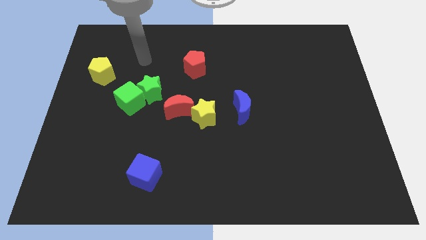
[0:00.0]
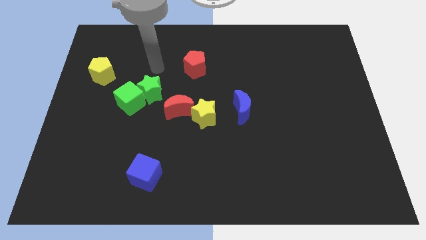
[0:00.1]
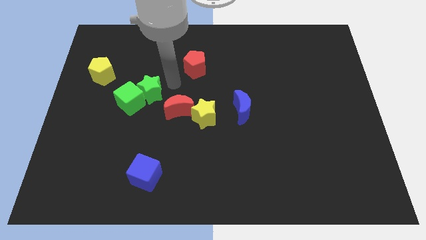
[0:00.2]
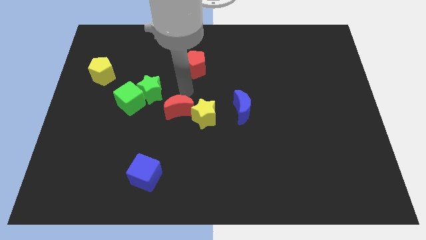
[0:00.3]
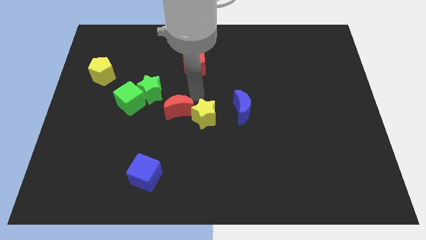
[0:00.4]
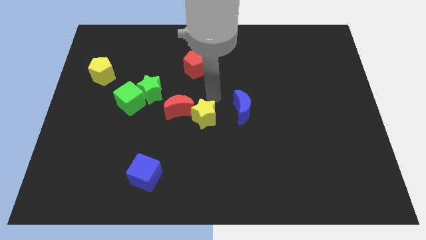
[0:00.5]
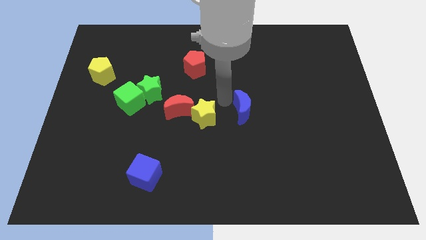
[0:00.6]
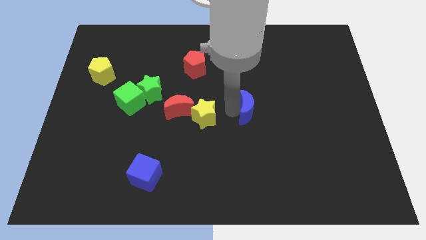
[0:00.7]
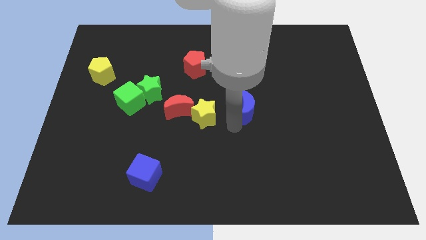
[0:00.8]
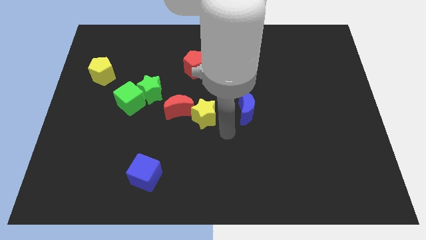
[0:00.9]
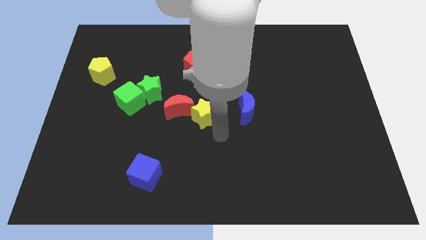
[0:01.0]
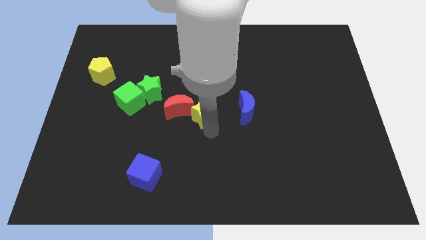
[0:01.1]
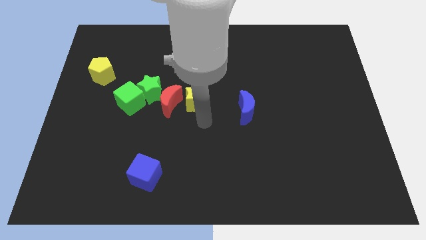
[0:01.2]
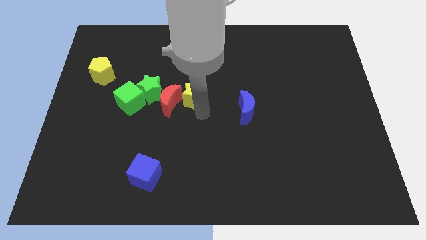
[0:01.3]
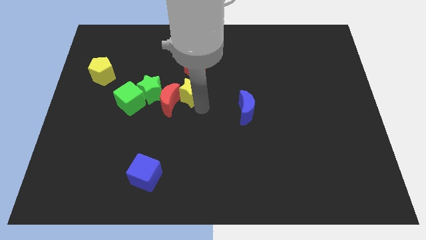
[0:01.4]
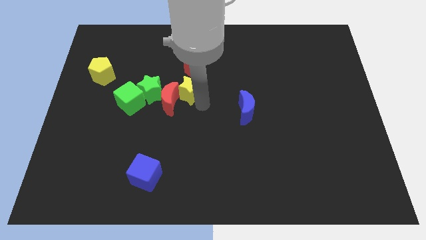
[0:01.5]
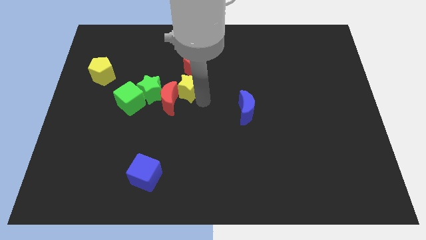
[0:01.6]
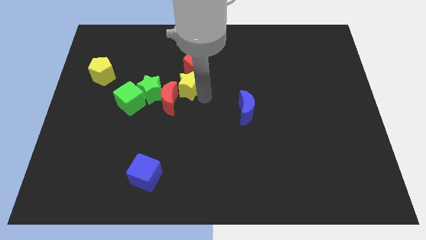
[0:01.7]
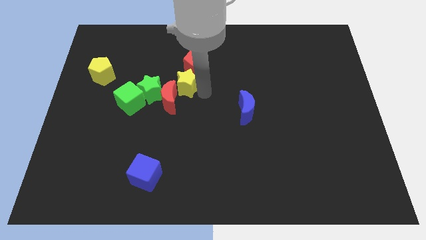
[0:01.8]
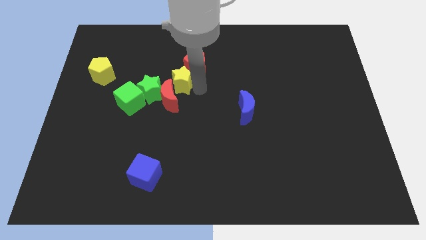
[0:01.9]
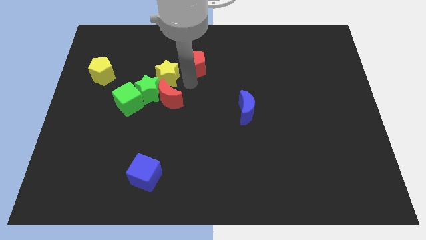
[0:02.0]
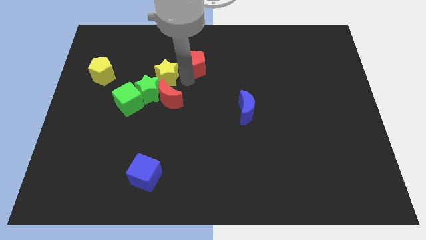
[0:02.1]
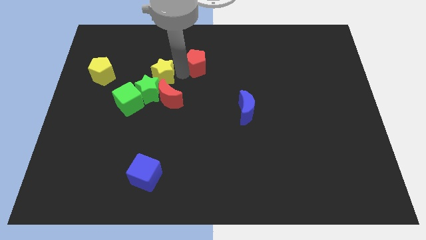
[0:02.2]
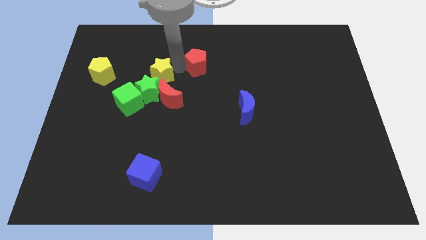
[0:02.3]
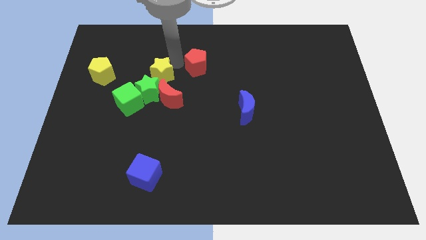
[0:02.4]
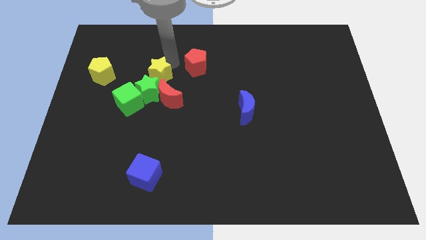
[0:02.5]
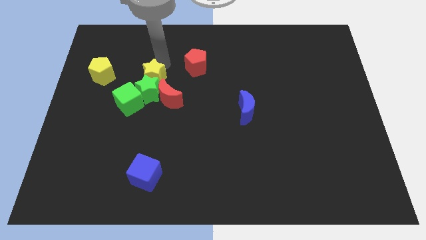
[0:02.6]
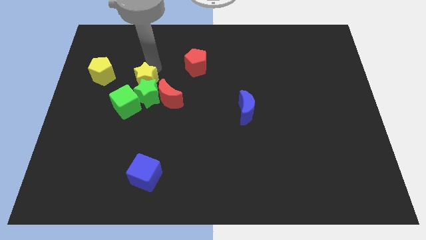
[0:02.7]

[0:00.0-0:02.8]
put the yellow star next to the green star

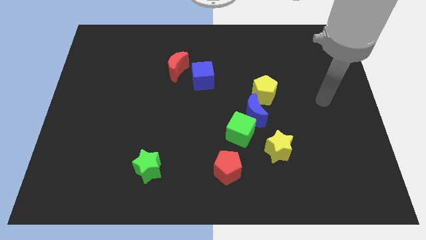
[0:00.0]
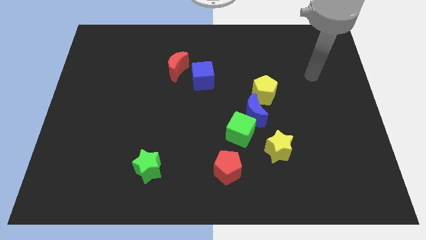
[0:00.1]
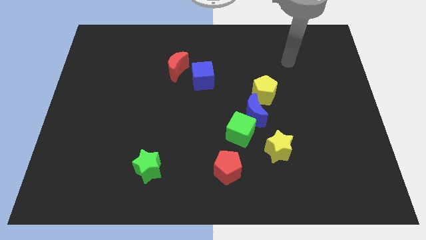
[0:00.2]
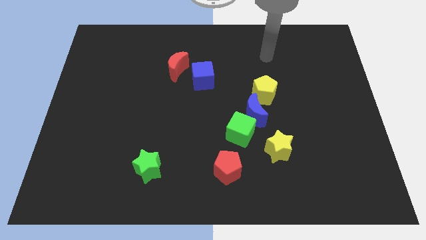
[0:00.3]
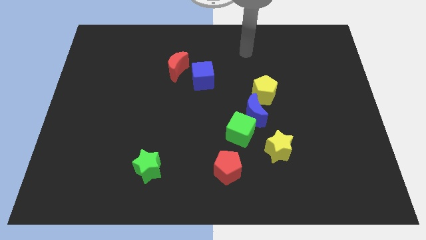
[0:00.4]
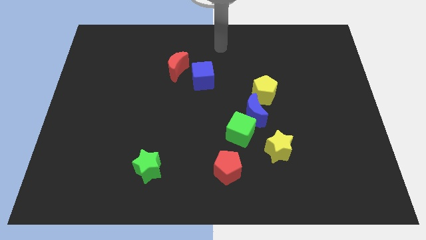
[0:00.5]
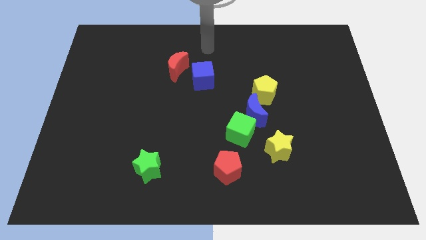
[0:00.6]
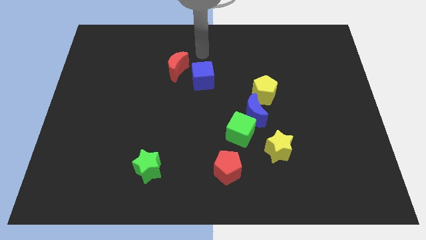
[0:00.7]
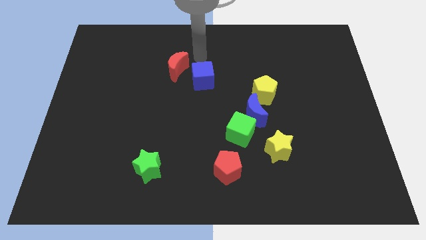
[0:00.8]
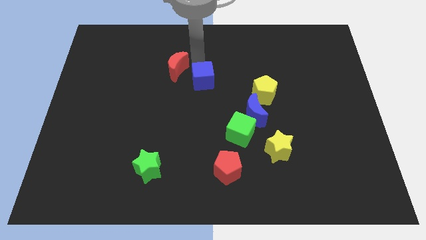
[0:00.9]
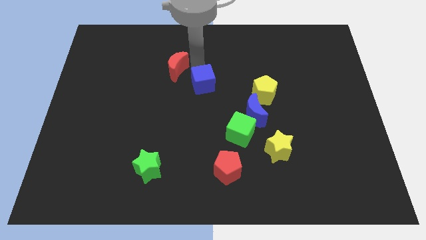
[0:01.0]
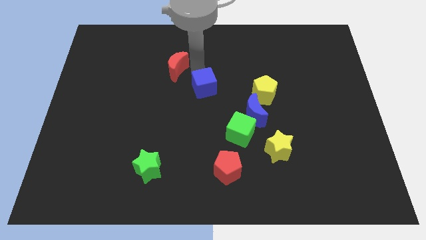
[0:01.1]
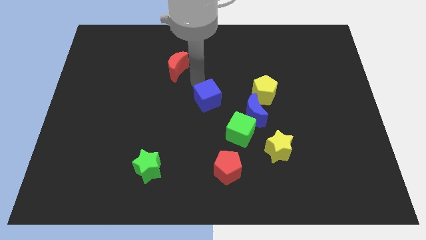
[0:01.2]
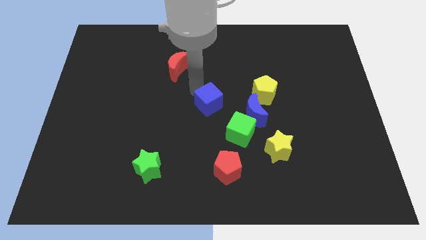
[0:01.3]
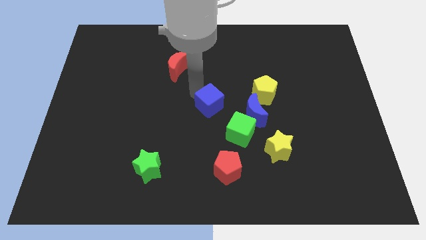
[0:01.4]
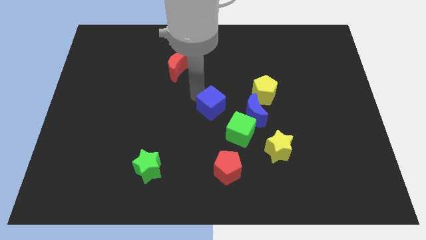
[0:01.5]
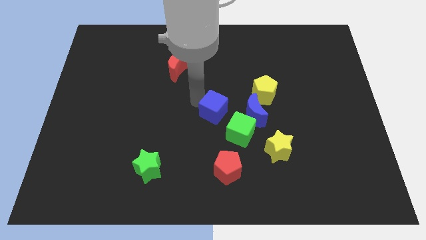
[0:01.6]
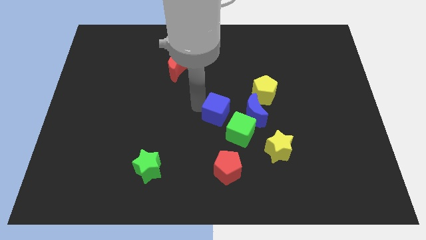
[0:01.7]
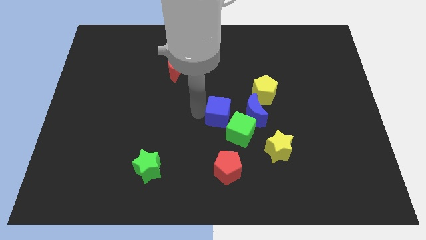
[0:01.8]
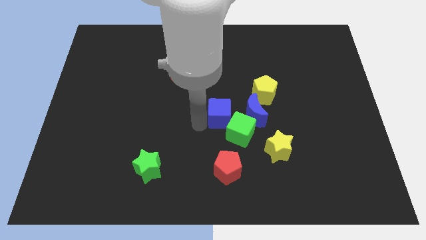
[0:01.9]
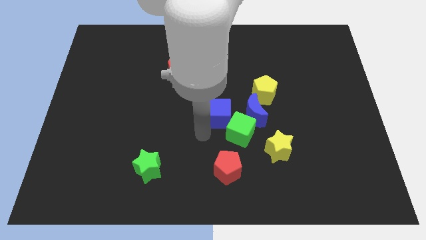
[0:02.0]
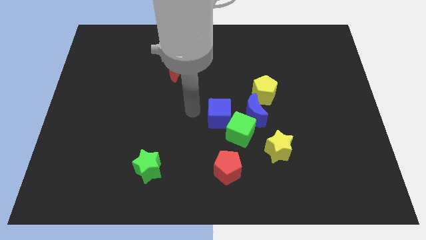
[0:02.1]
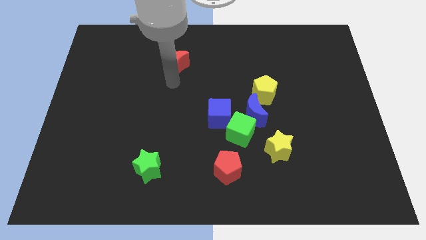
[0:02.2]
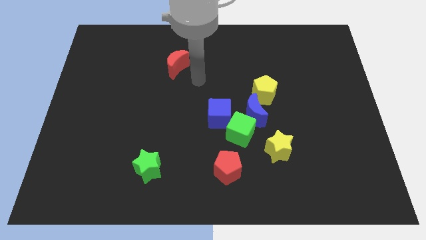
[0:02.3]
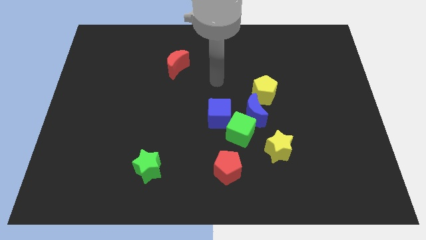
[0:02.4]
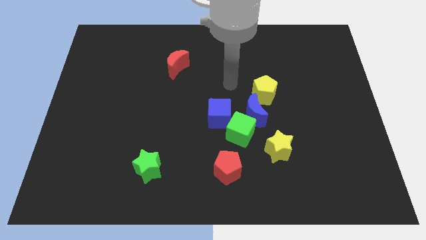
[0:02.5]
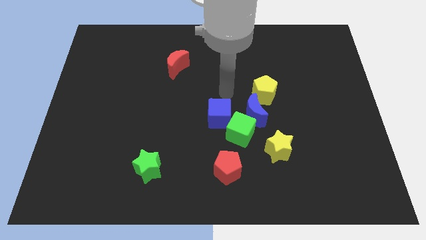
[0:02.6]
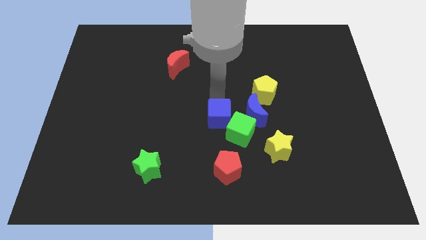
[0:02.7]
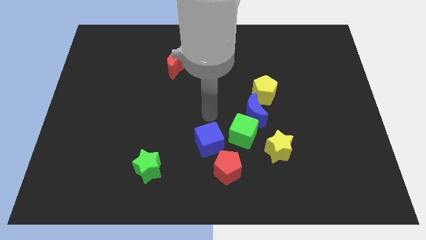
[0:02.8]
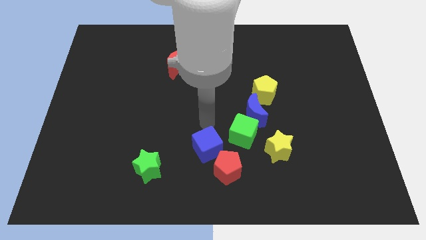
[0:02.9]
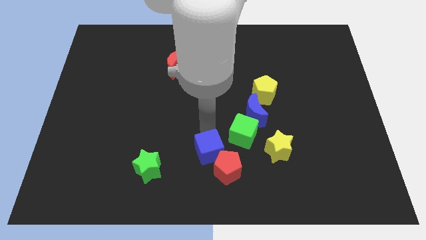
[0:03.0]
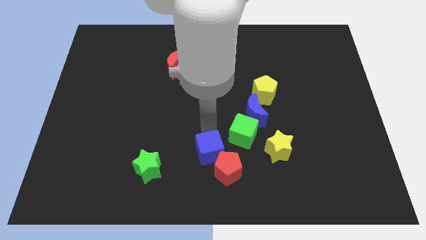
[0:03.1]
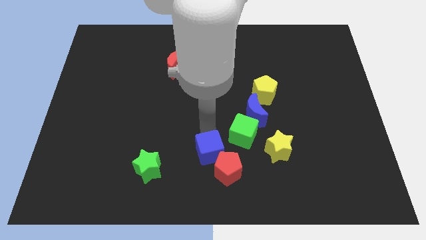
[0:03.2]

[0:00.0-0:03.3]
push the blue cube to the red pentagon

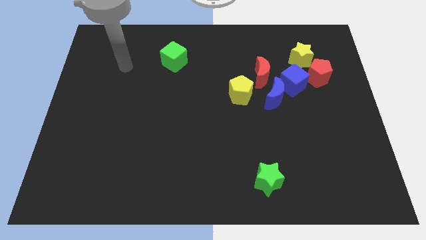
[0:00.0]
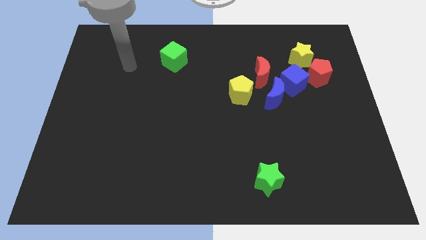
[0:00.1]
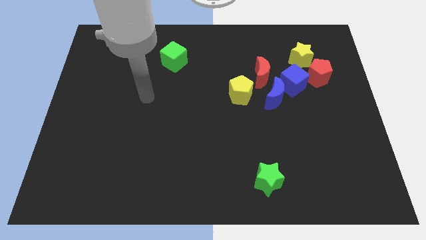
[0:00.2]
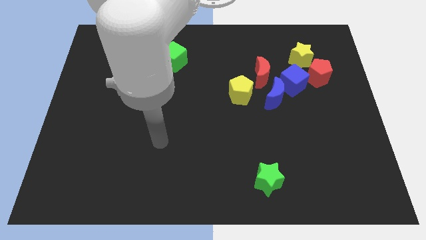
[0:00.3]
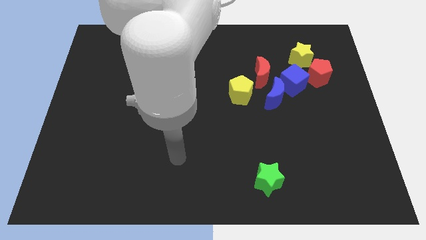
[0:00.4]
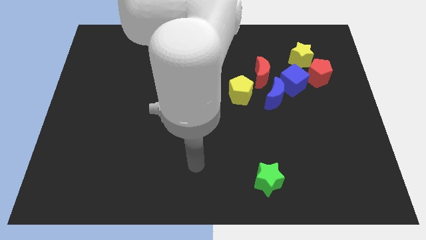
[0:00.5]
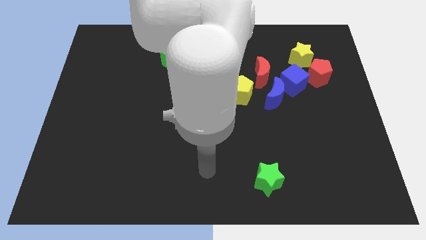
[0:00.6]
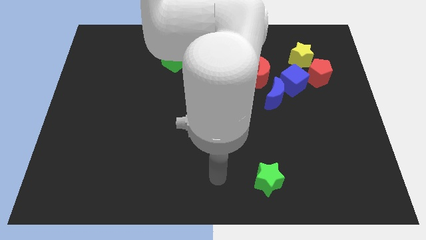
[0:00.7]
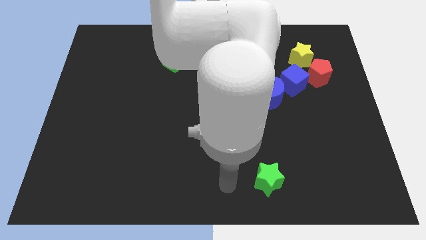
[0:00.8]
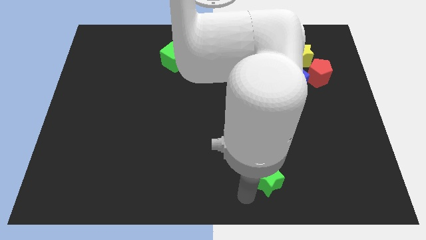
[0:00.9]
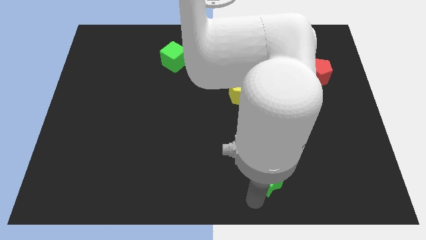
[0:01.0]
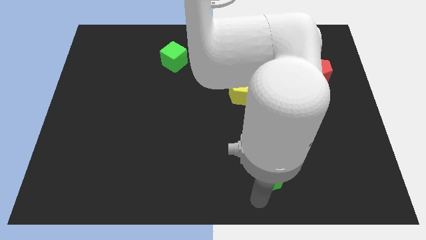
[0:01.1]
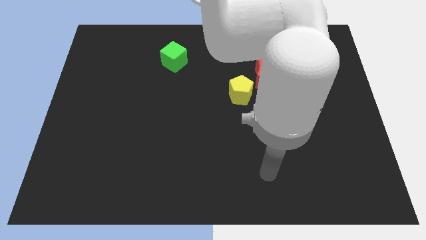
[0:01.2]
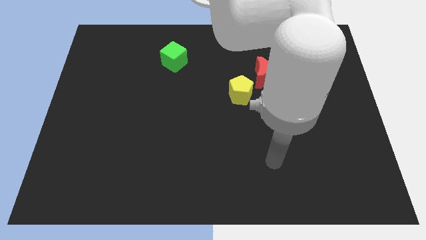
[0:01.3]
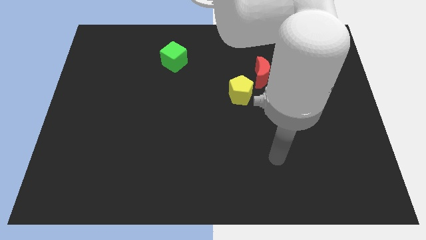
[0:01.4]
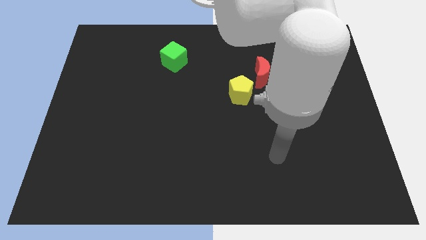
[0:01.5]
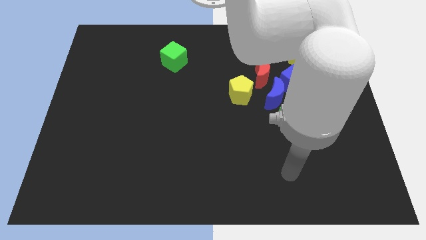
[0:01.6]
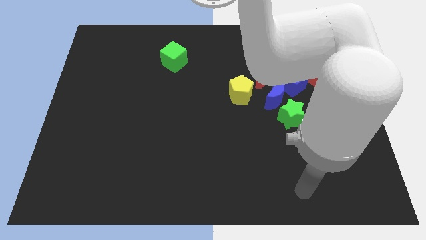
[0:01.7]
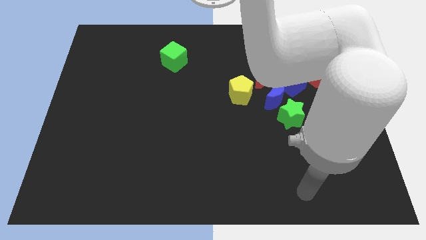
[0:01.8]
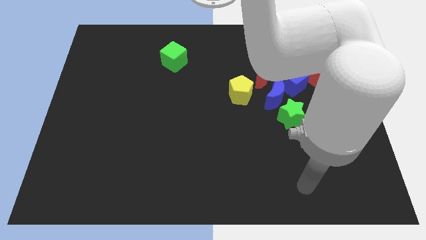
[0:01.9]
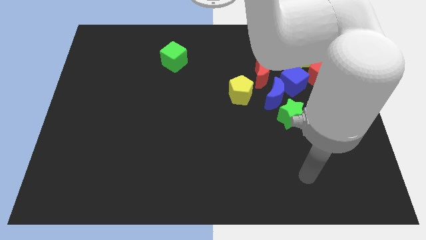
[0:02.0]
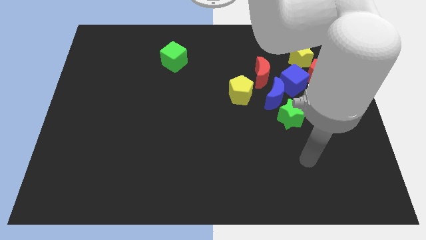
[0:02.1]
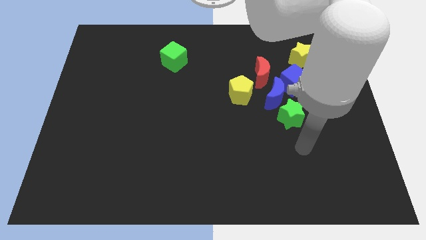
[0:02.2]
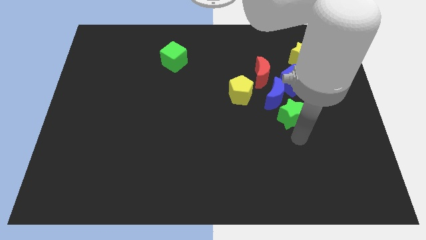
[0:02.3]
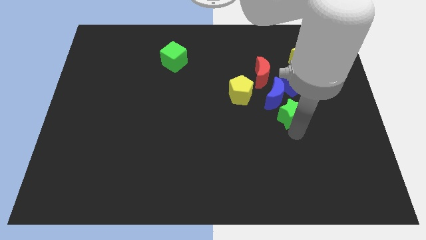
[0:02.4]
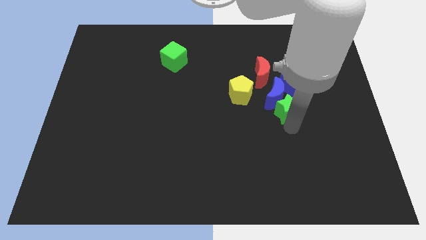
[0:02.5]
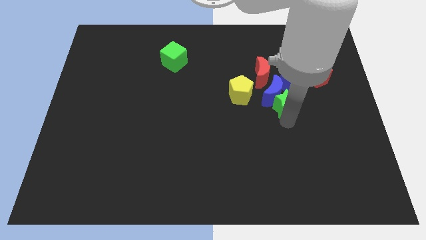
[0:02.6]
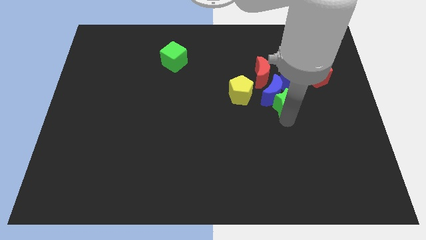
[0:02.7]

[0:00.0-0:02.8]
push the green star to the blue moon
